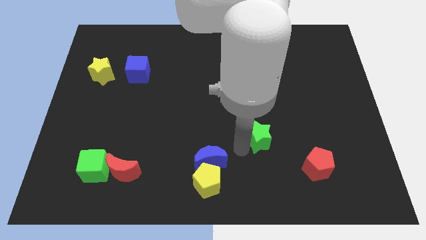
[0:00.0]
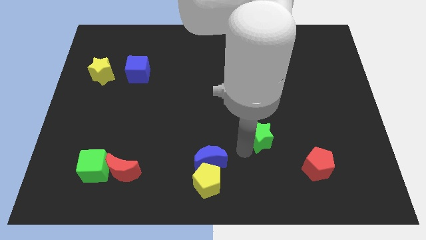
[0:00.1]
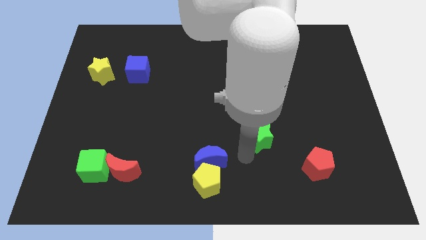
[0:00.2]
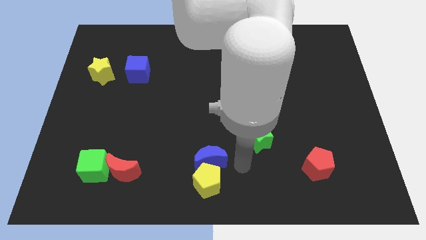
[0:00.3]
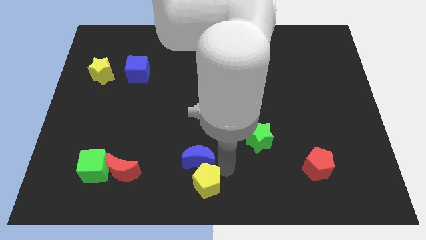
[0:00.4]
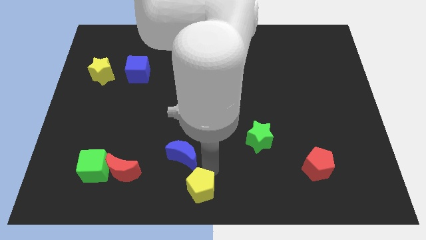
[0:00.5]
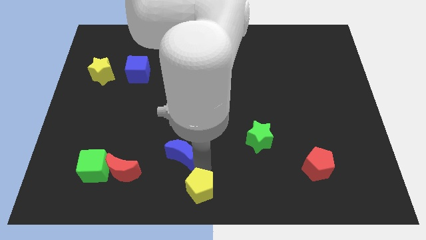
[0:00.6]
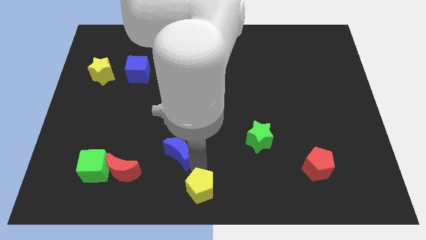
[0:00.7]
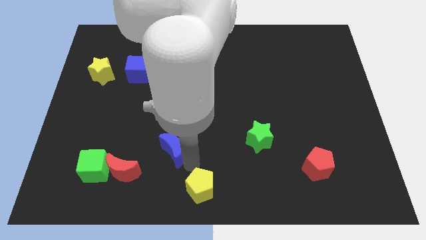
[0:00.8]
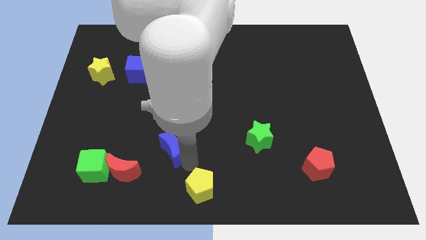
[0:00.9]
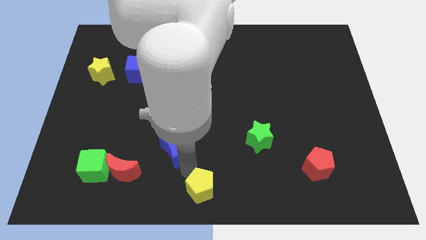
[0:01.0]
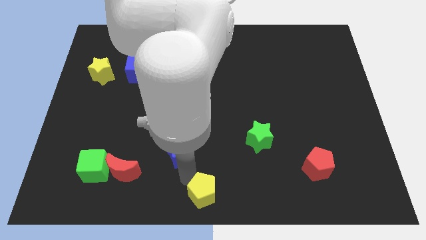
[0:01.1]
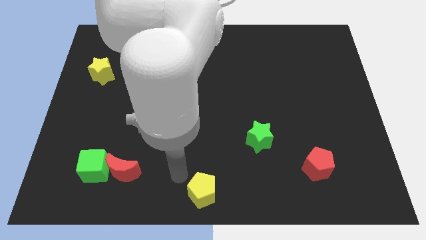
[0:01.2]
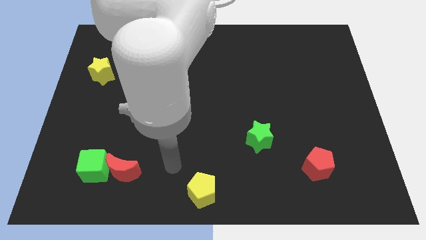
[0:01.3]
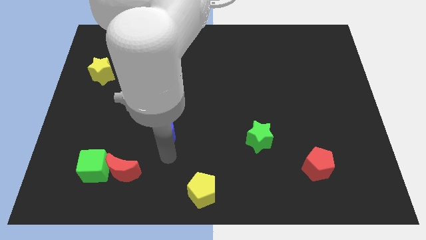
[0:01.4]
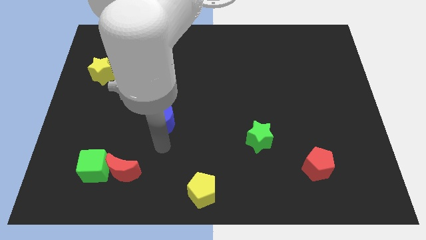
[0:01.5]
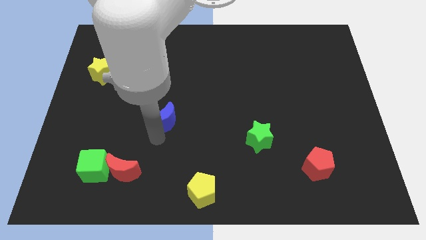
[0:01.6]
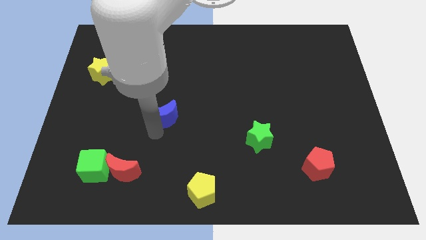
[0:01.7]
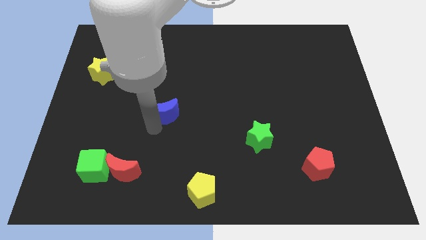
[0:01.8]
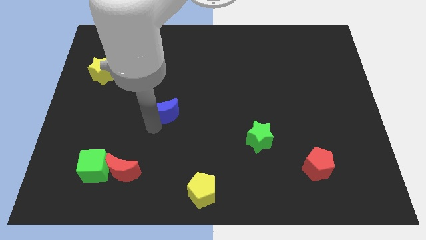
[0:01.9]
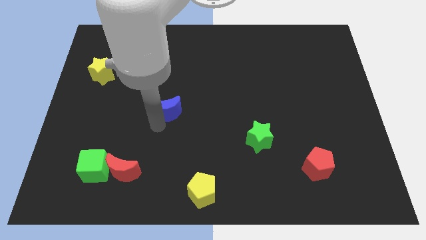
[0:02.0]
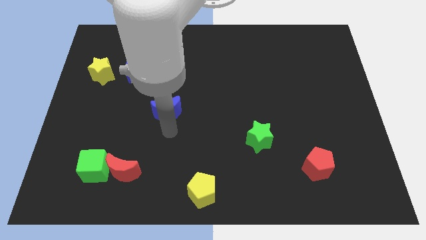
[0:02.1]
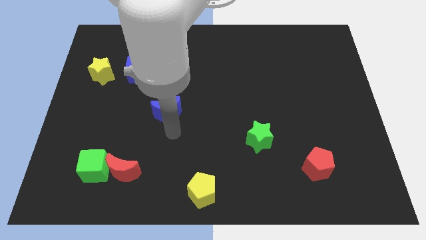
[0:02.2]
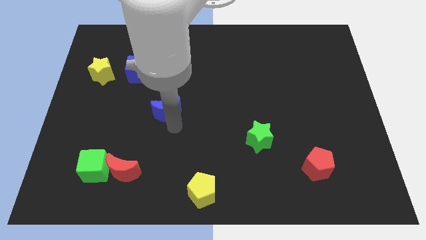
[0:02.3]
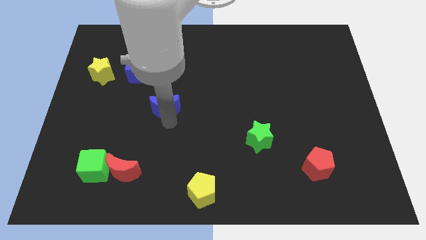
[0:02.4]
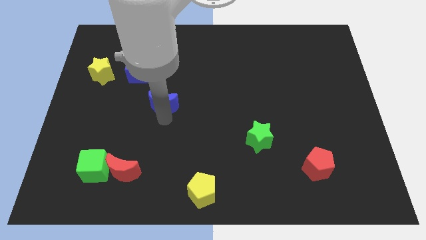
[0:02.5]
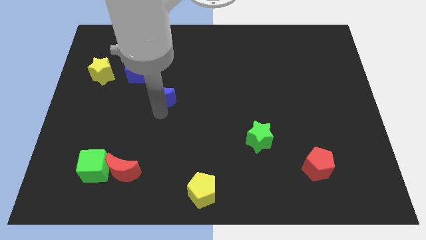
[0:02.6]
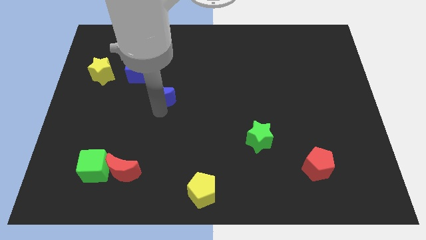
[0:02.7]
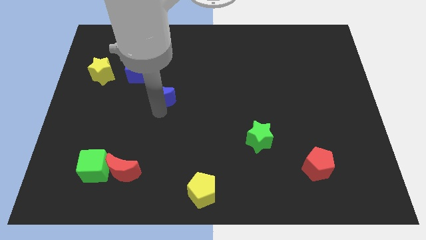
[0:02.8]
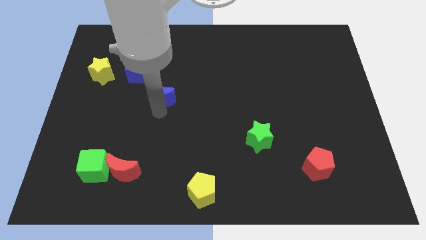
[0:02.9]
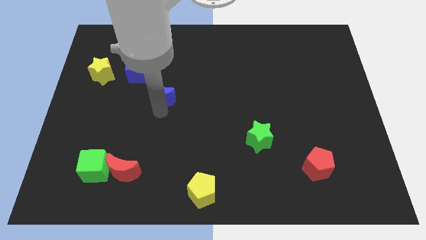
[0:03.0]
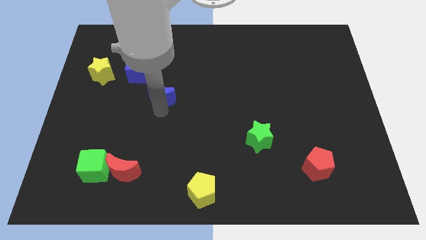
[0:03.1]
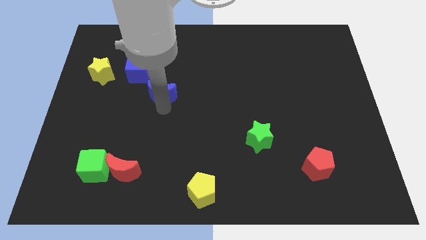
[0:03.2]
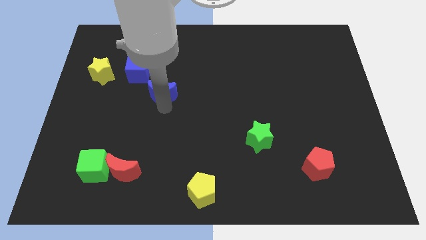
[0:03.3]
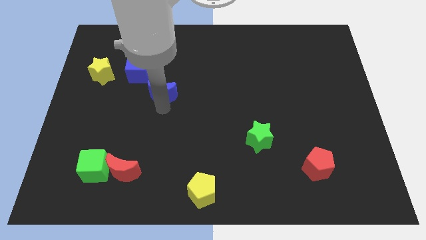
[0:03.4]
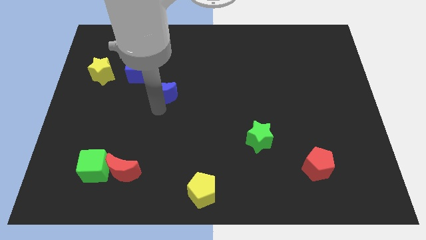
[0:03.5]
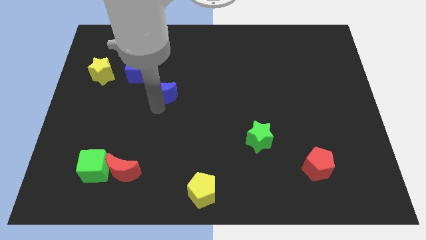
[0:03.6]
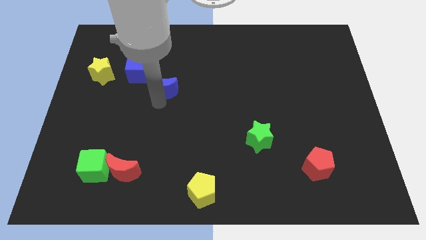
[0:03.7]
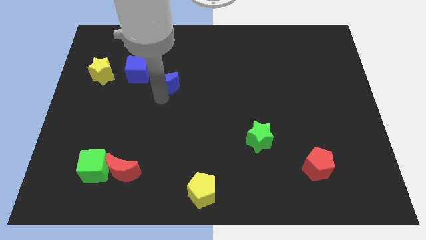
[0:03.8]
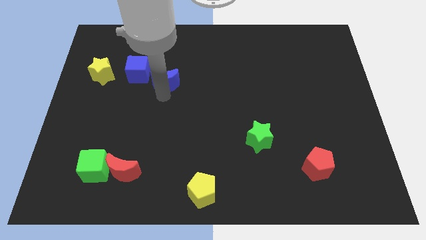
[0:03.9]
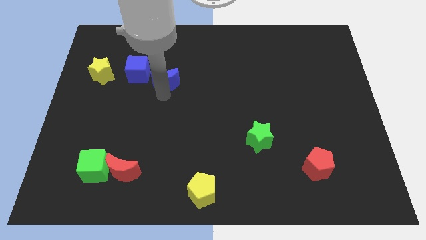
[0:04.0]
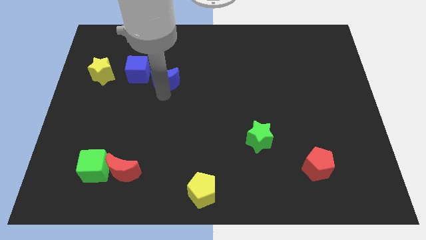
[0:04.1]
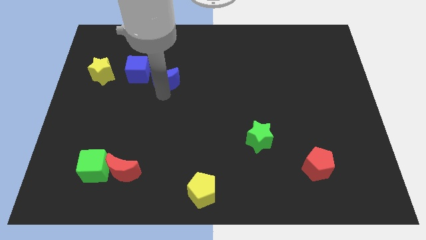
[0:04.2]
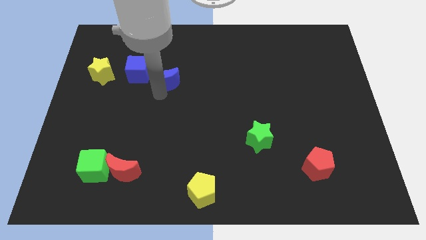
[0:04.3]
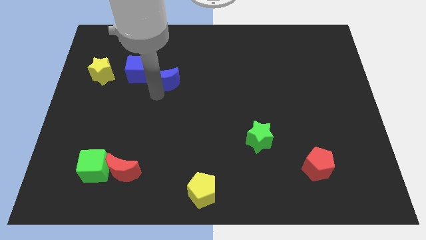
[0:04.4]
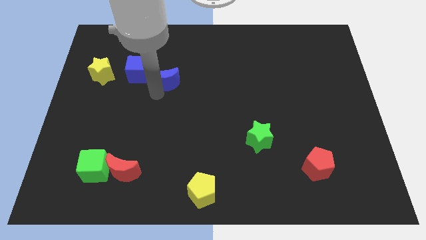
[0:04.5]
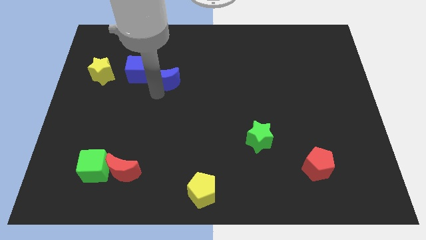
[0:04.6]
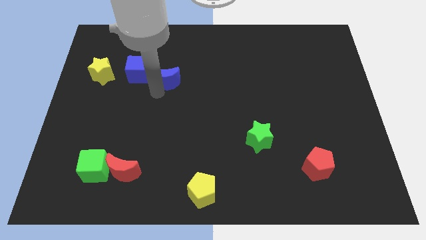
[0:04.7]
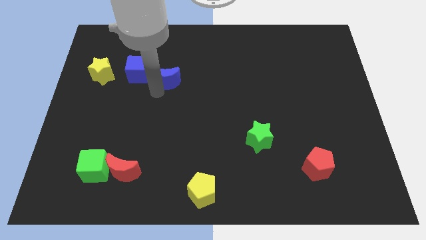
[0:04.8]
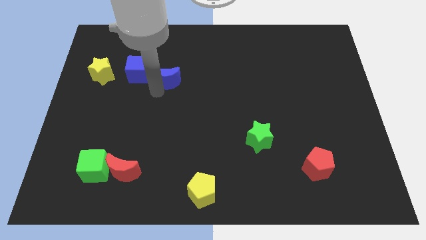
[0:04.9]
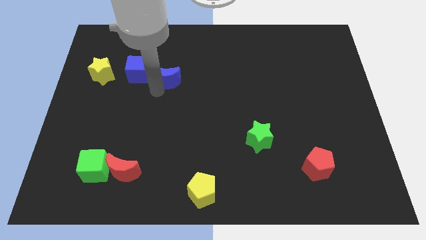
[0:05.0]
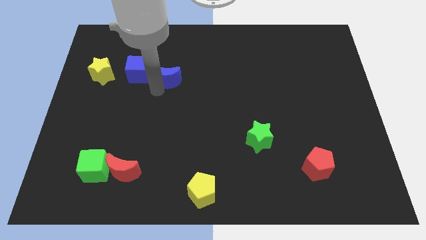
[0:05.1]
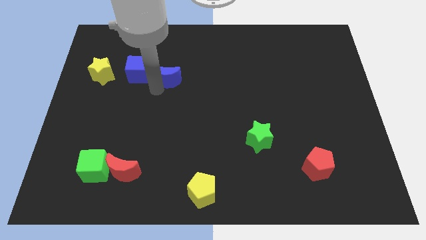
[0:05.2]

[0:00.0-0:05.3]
push the bottom blue crescent towards the blue cube

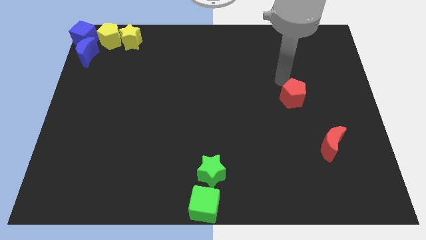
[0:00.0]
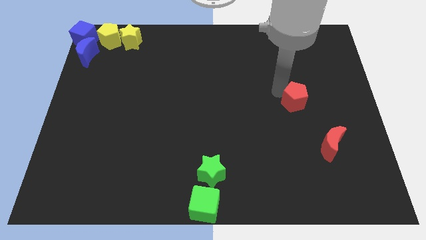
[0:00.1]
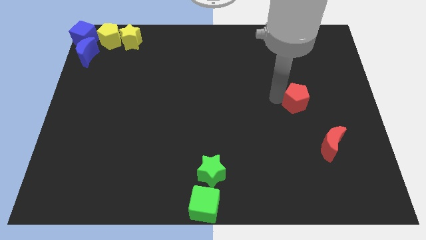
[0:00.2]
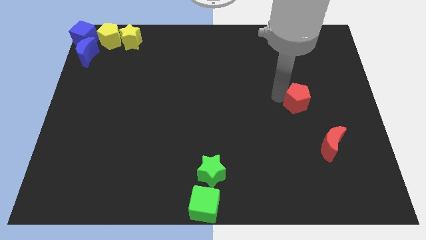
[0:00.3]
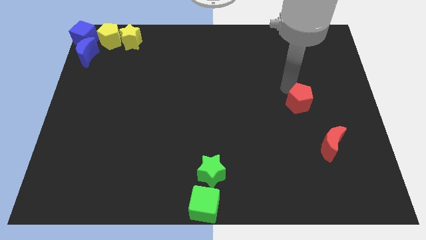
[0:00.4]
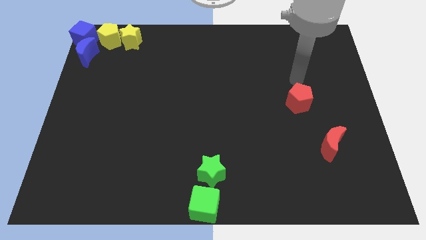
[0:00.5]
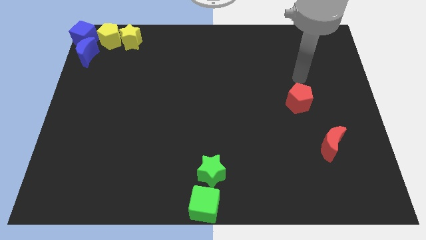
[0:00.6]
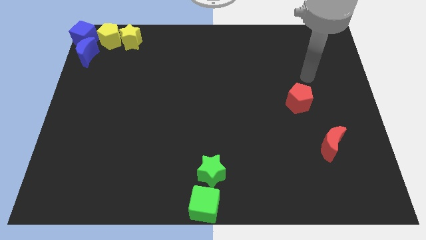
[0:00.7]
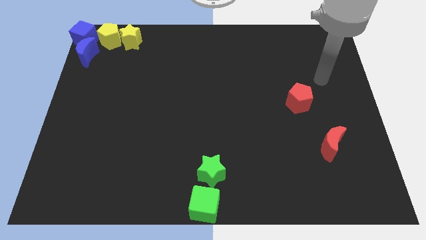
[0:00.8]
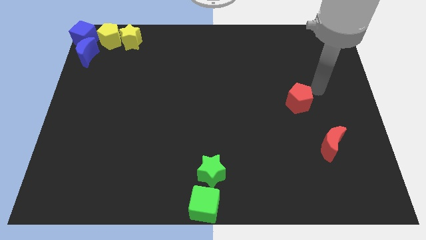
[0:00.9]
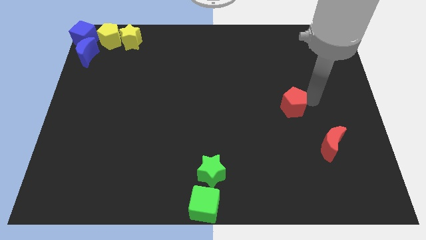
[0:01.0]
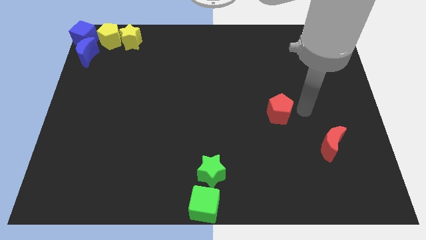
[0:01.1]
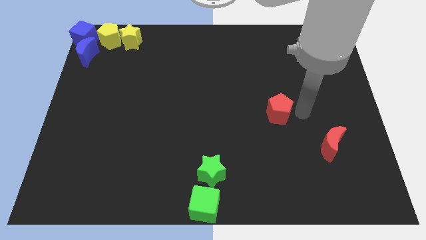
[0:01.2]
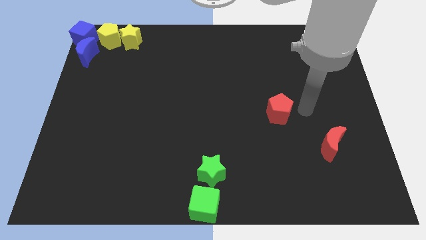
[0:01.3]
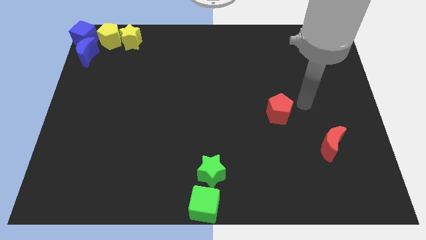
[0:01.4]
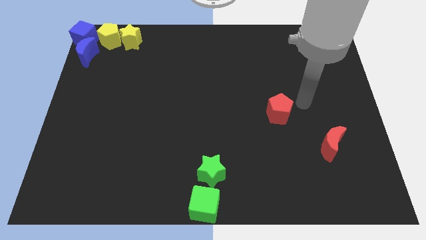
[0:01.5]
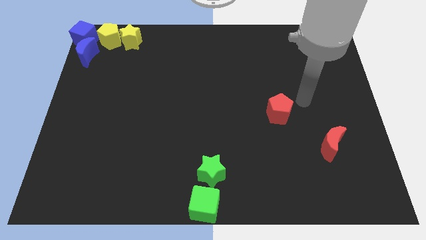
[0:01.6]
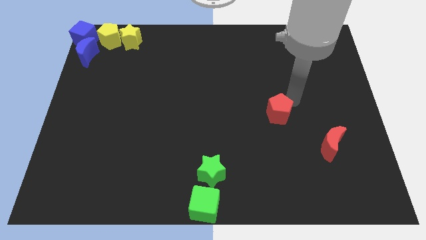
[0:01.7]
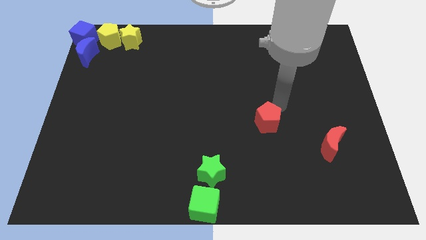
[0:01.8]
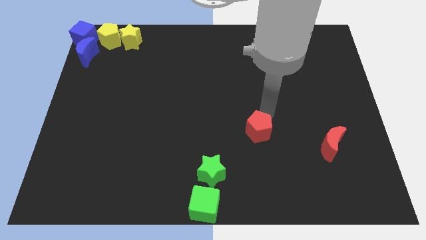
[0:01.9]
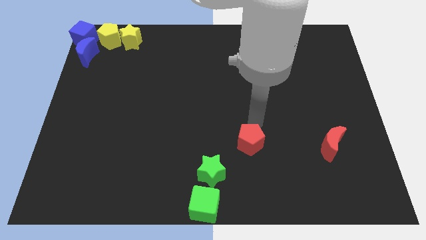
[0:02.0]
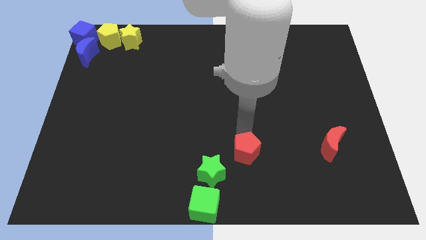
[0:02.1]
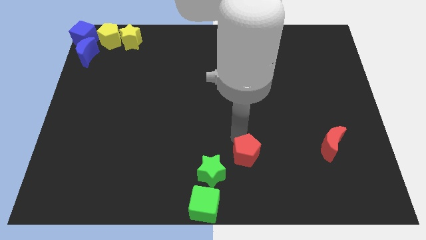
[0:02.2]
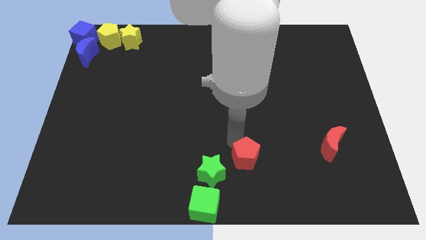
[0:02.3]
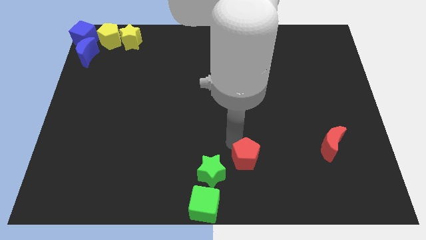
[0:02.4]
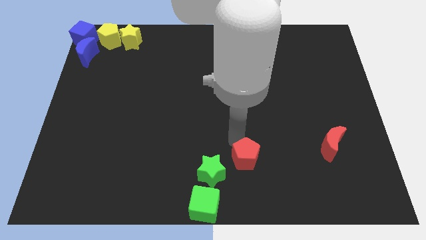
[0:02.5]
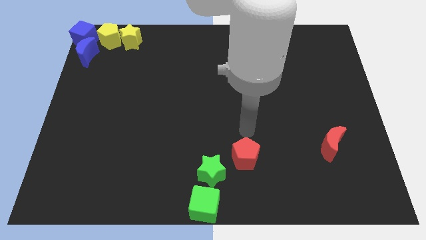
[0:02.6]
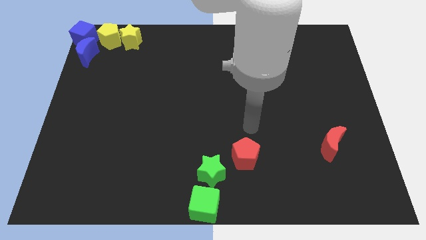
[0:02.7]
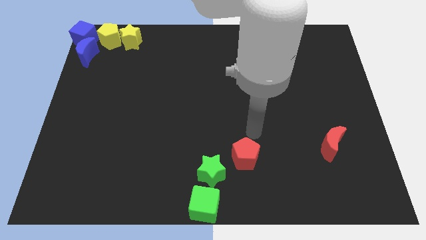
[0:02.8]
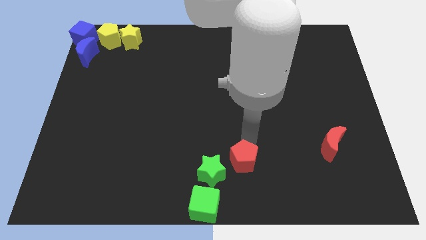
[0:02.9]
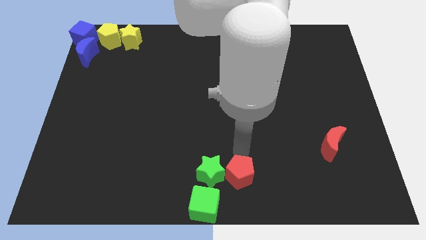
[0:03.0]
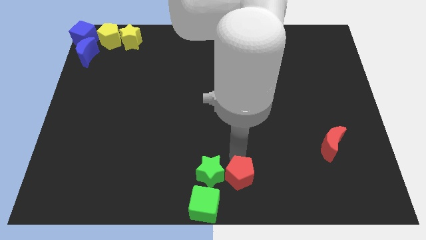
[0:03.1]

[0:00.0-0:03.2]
place the red pentagon to the right side of the green star

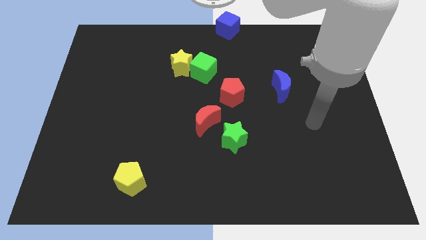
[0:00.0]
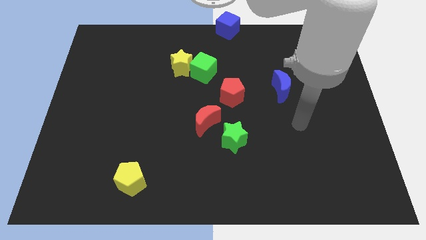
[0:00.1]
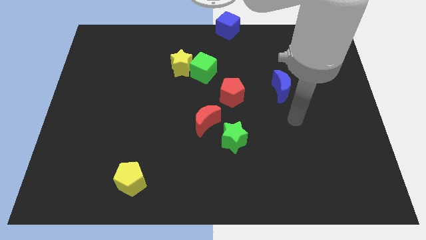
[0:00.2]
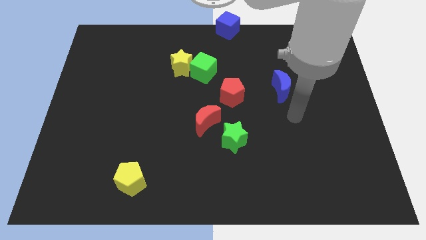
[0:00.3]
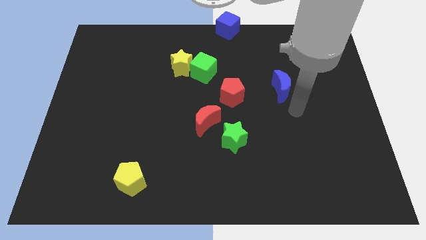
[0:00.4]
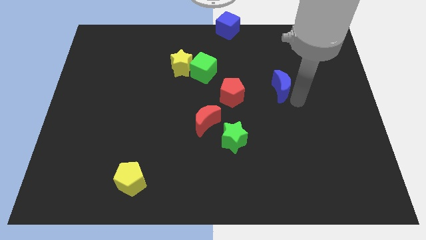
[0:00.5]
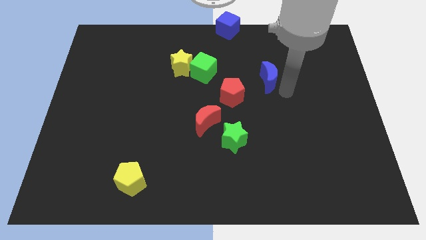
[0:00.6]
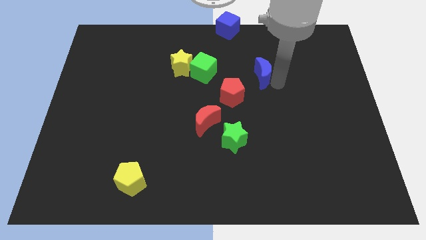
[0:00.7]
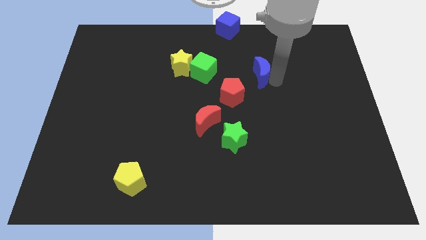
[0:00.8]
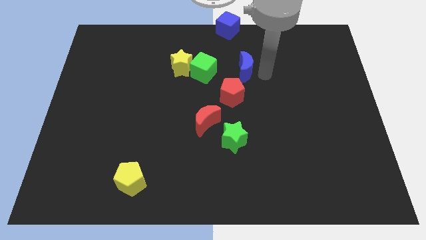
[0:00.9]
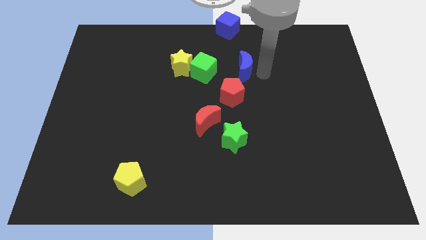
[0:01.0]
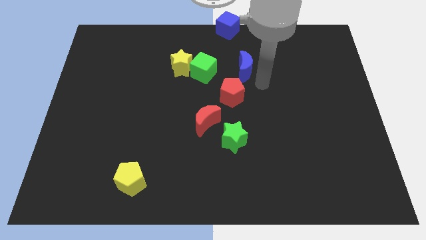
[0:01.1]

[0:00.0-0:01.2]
place the blue moon right to the green cube
